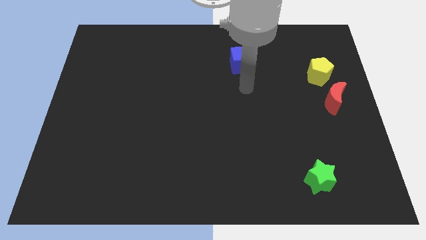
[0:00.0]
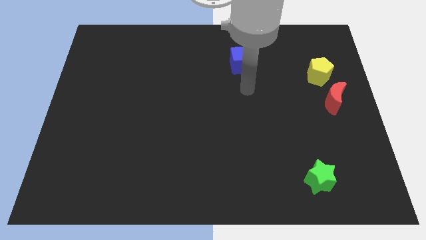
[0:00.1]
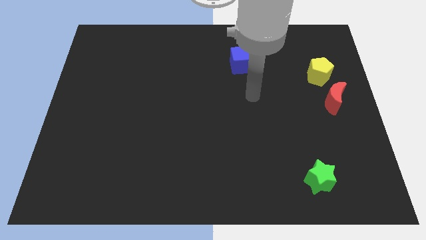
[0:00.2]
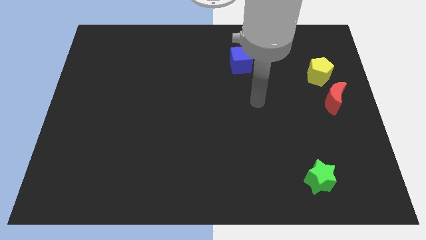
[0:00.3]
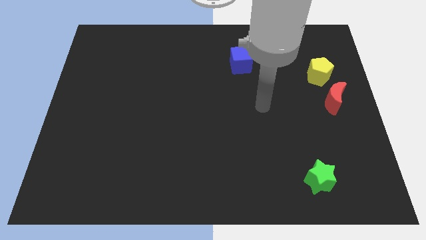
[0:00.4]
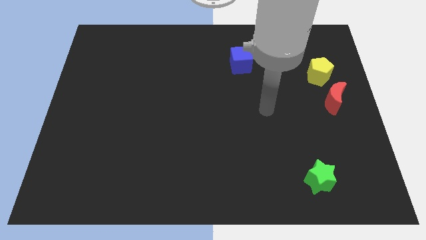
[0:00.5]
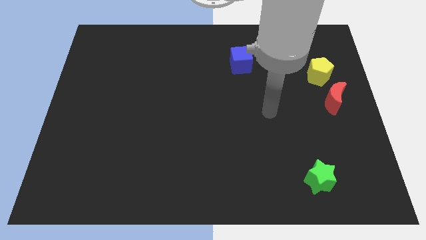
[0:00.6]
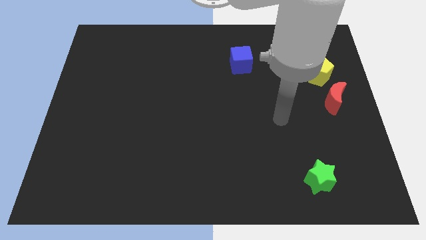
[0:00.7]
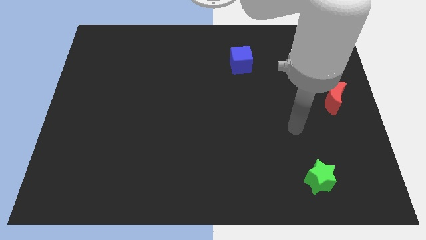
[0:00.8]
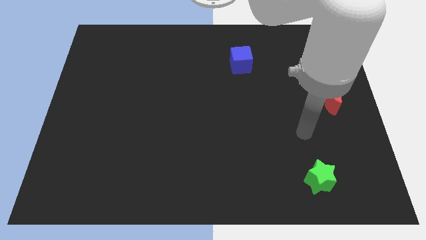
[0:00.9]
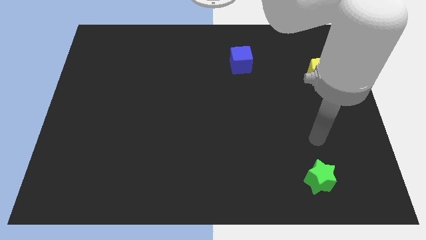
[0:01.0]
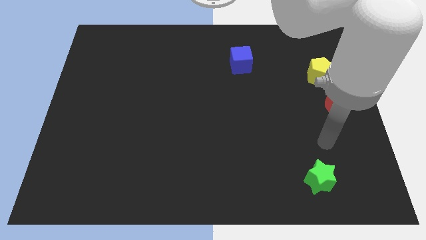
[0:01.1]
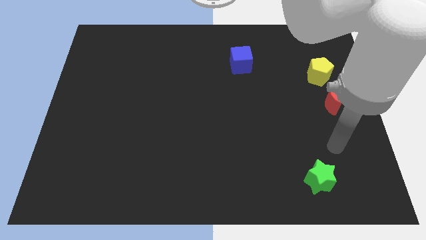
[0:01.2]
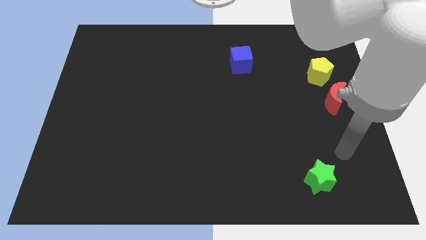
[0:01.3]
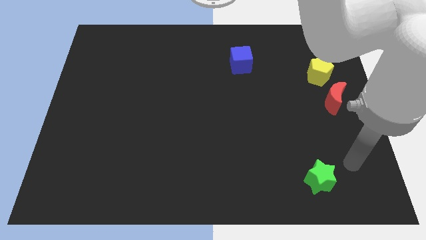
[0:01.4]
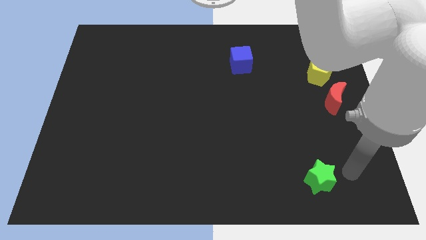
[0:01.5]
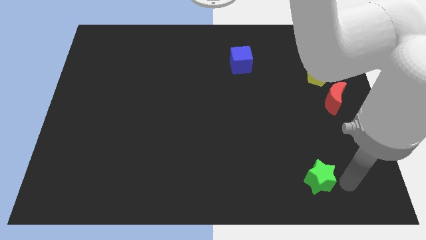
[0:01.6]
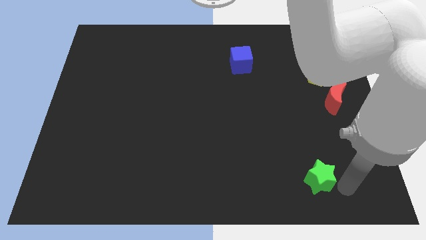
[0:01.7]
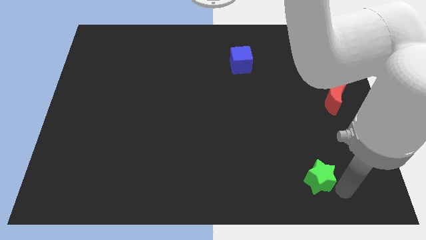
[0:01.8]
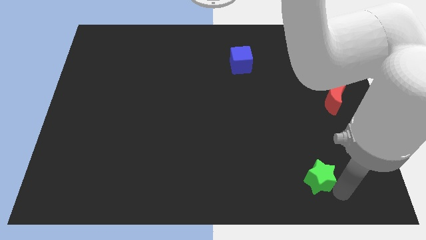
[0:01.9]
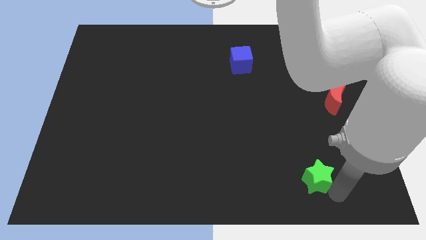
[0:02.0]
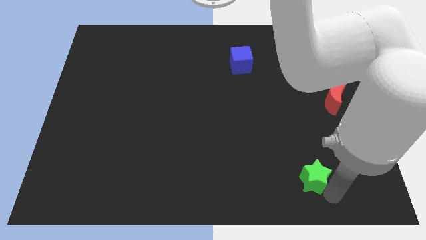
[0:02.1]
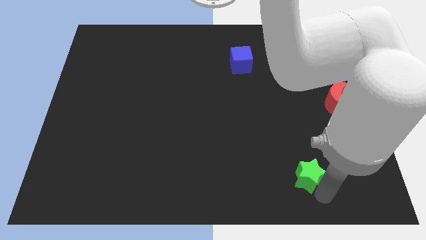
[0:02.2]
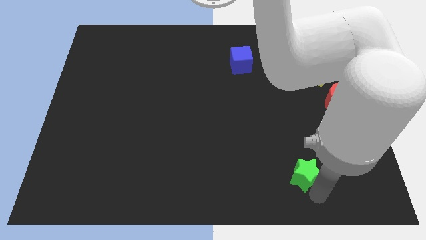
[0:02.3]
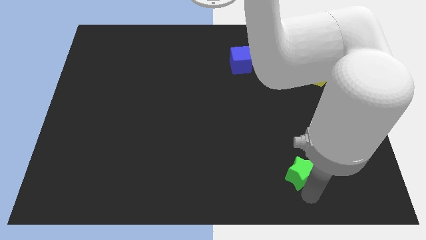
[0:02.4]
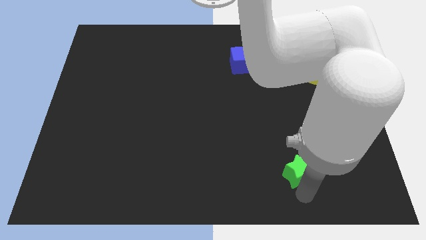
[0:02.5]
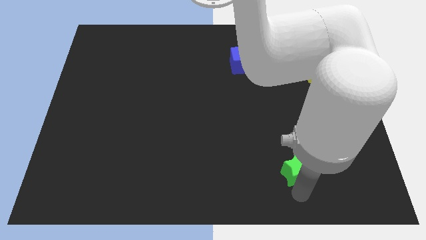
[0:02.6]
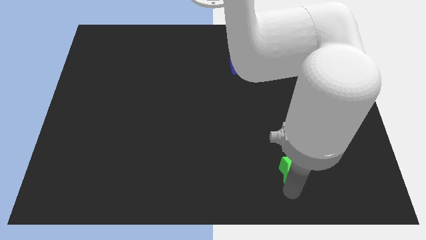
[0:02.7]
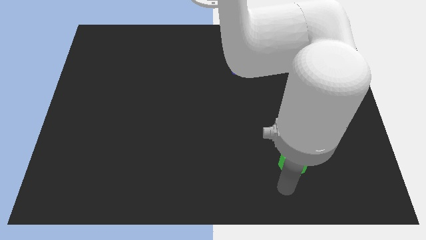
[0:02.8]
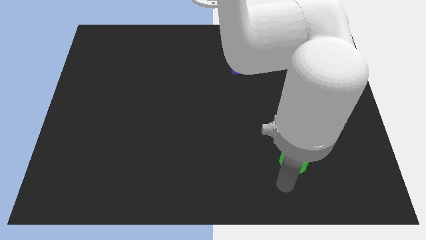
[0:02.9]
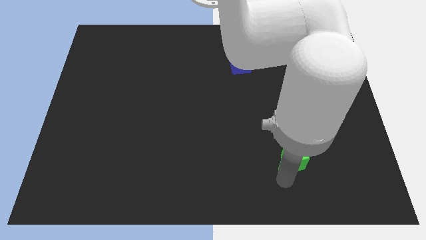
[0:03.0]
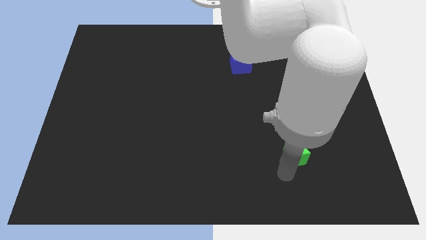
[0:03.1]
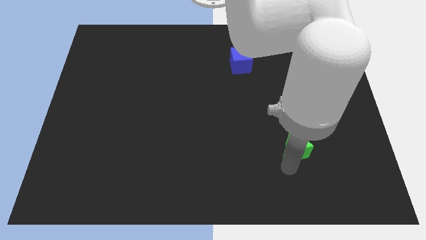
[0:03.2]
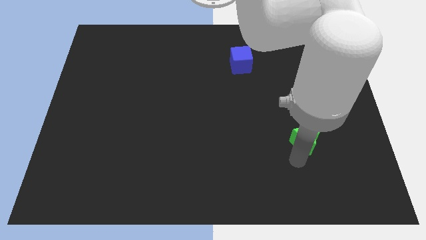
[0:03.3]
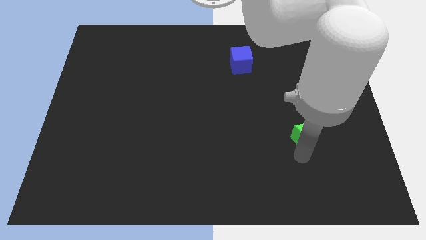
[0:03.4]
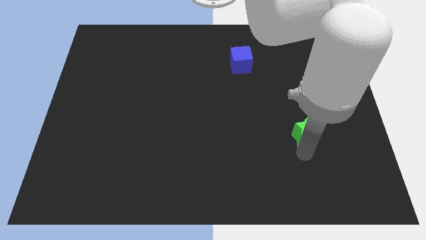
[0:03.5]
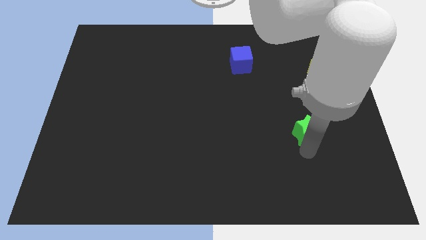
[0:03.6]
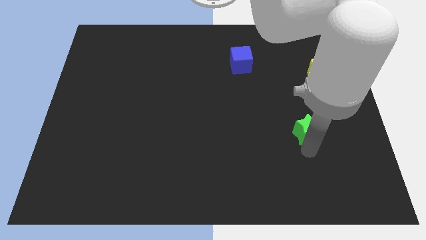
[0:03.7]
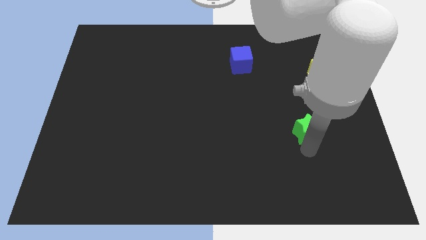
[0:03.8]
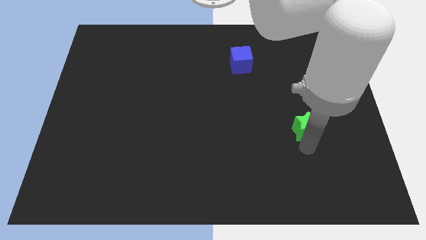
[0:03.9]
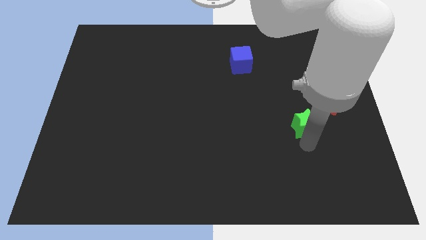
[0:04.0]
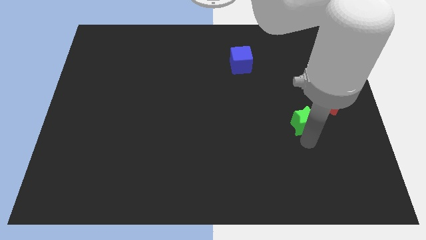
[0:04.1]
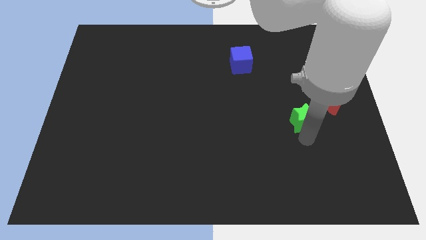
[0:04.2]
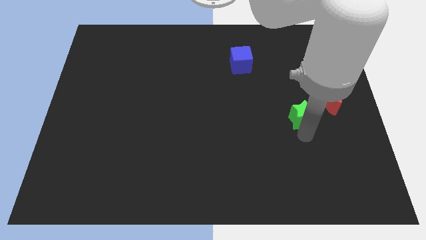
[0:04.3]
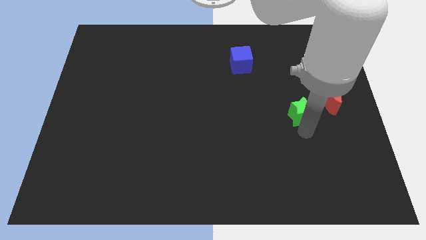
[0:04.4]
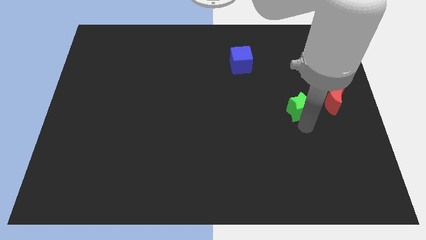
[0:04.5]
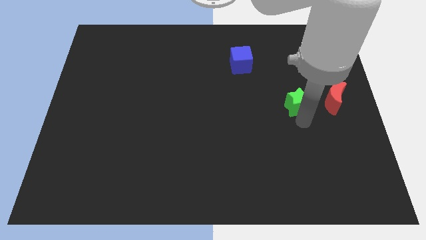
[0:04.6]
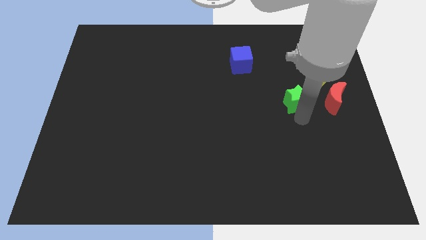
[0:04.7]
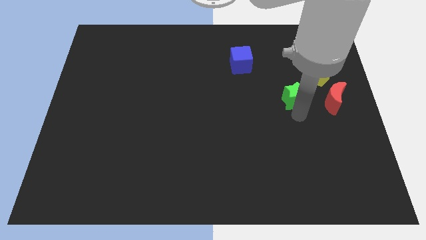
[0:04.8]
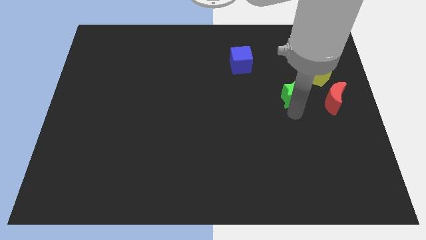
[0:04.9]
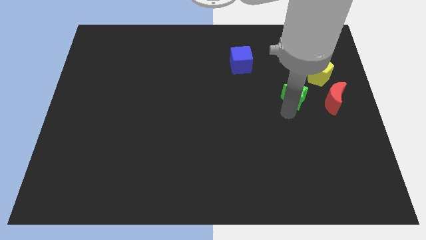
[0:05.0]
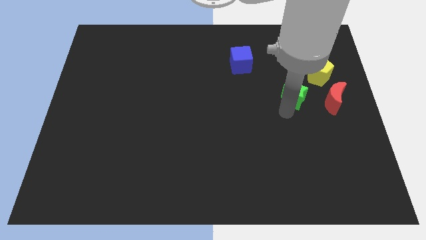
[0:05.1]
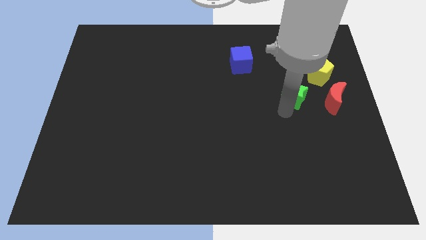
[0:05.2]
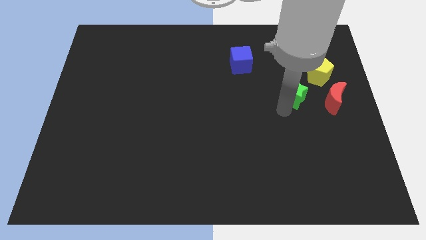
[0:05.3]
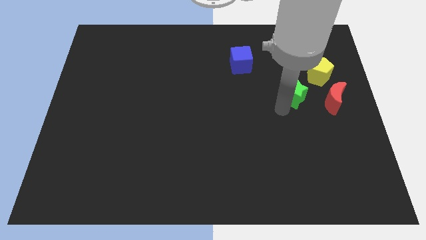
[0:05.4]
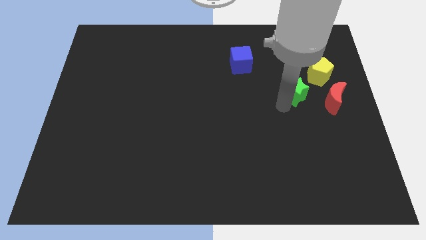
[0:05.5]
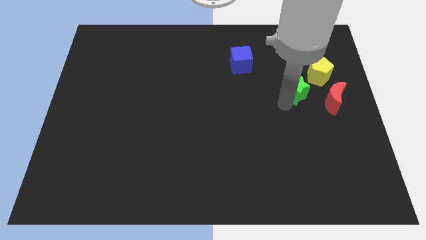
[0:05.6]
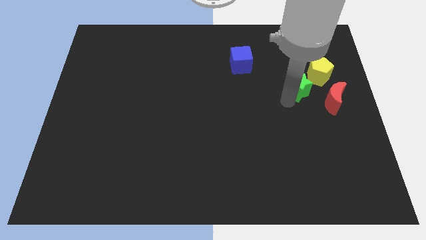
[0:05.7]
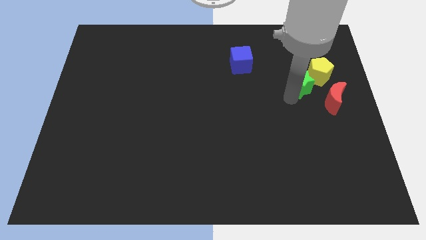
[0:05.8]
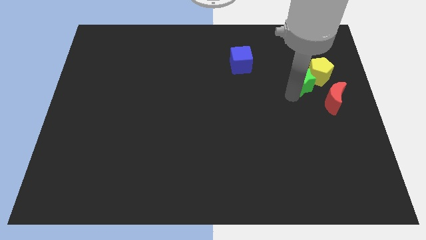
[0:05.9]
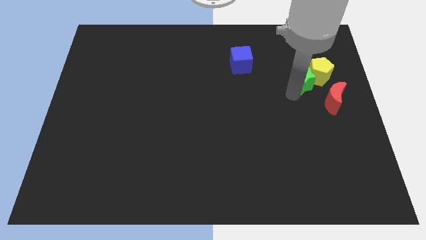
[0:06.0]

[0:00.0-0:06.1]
slide the green star to the pentagon

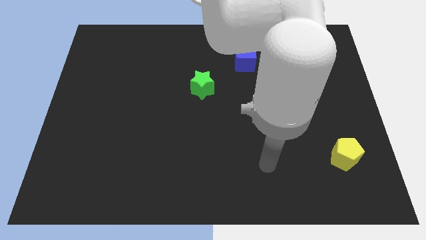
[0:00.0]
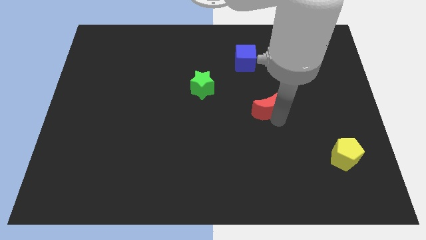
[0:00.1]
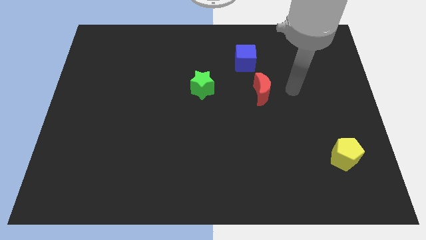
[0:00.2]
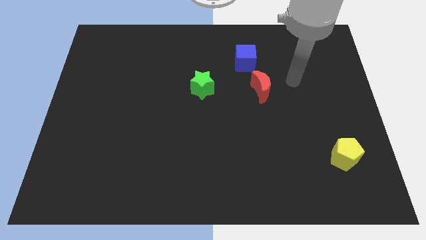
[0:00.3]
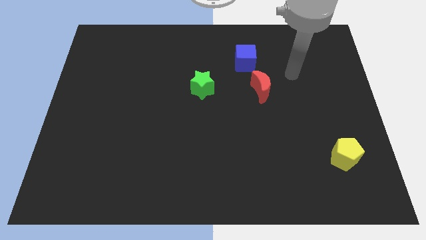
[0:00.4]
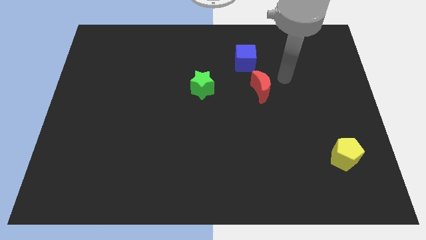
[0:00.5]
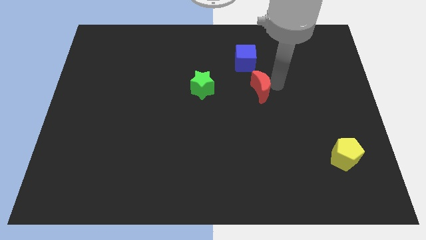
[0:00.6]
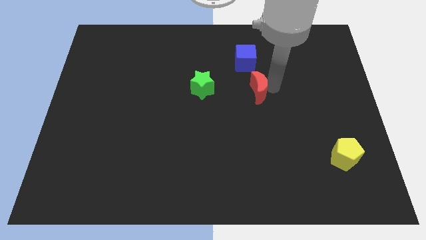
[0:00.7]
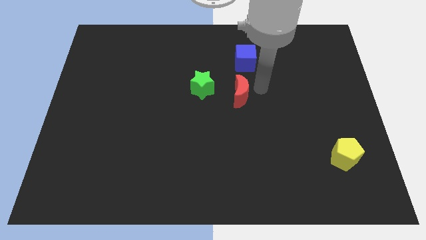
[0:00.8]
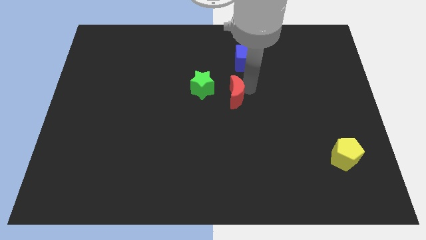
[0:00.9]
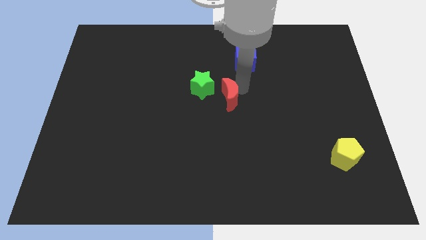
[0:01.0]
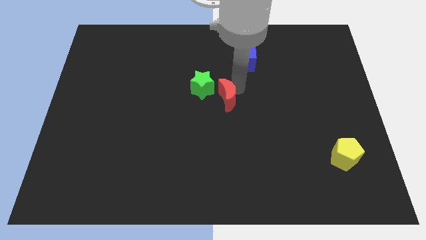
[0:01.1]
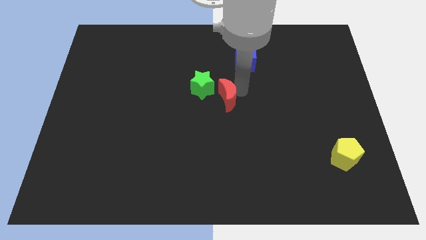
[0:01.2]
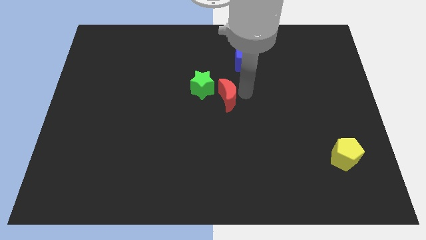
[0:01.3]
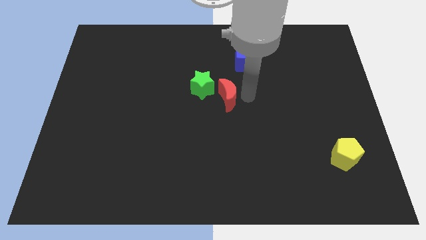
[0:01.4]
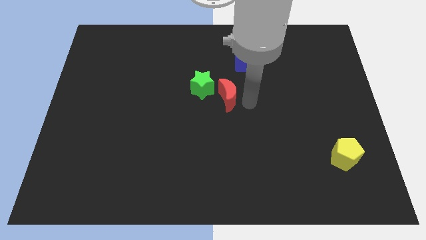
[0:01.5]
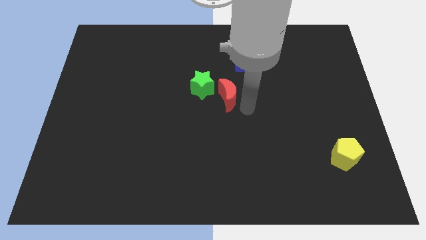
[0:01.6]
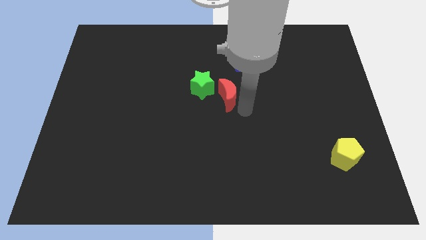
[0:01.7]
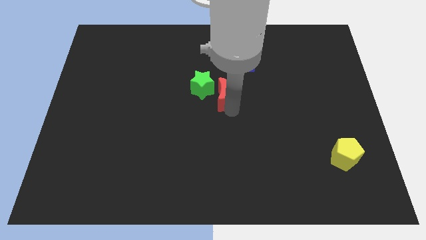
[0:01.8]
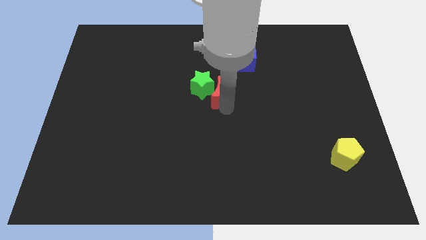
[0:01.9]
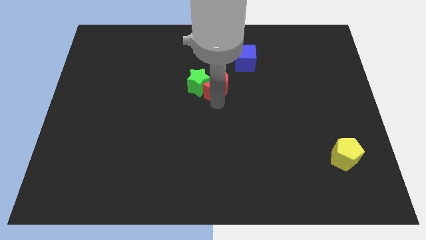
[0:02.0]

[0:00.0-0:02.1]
slide the red block next to the green star

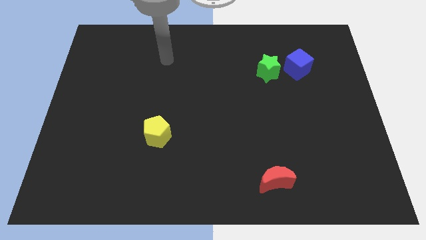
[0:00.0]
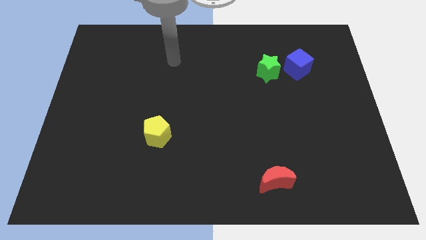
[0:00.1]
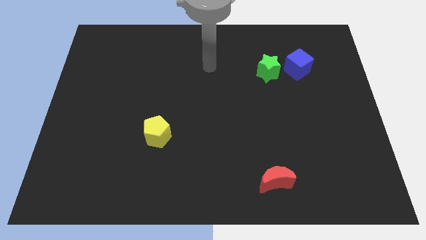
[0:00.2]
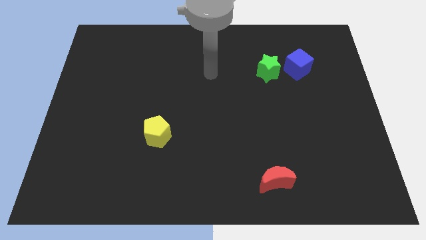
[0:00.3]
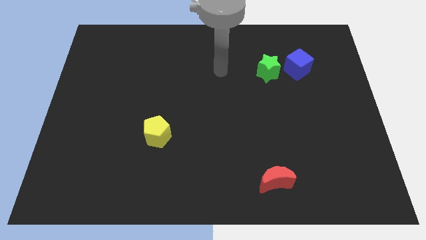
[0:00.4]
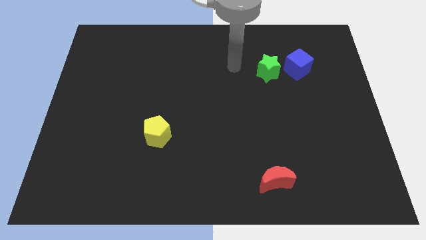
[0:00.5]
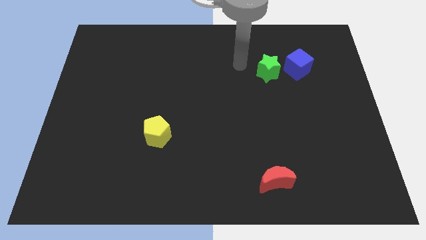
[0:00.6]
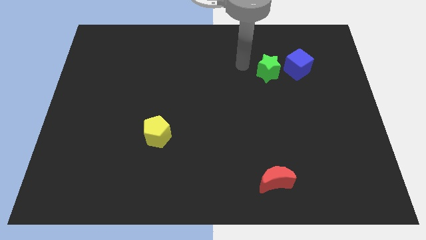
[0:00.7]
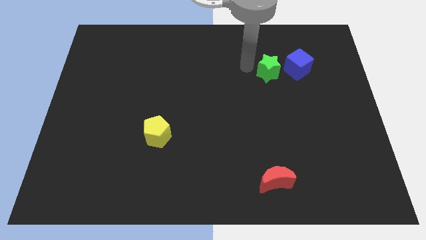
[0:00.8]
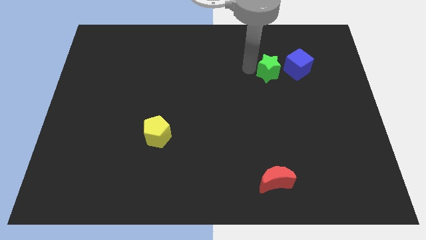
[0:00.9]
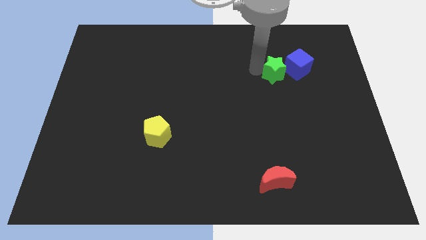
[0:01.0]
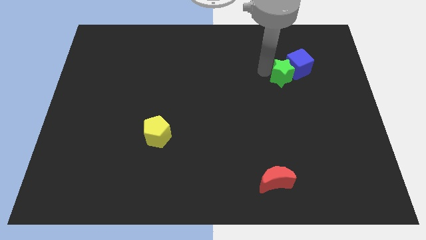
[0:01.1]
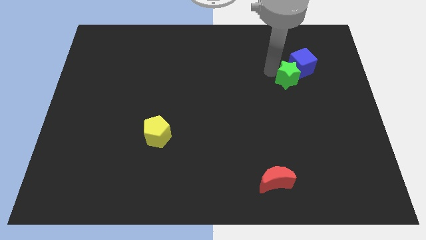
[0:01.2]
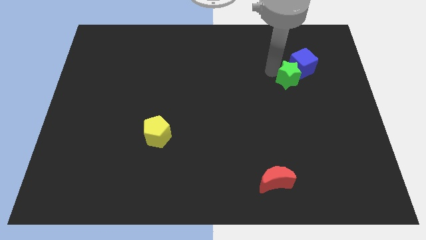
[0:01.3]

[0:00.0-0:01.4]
put the star next to the cube
